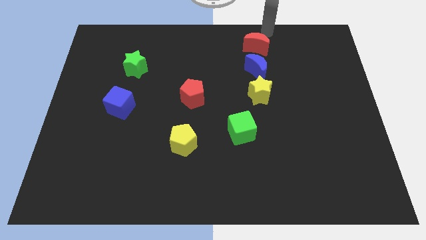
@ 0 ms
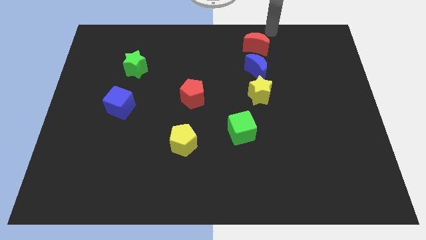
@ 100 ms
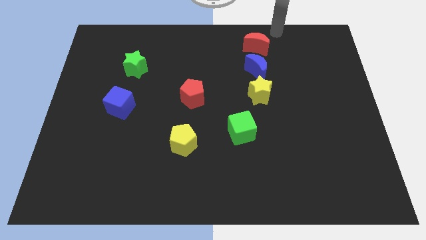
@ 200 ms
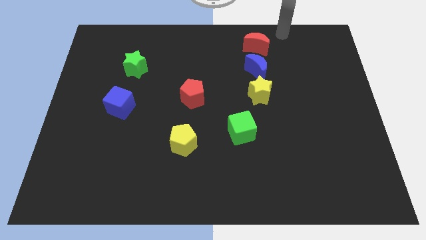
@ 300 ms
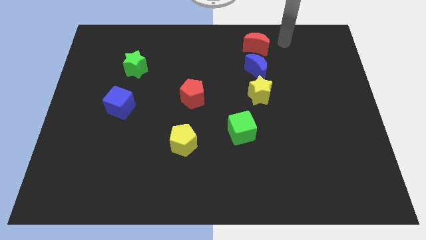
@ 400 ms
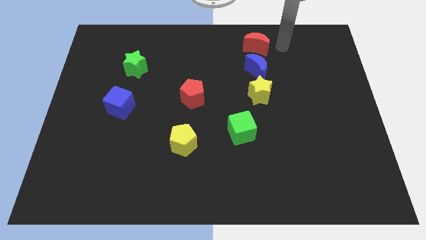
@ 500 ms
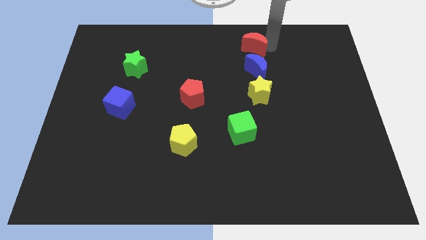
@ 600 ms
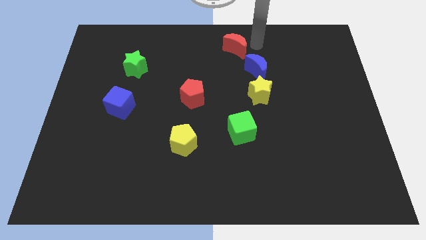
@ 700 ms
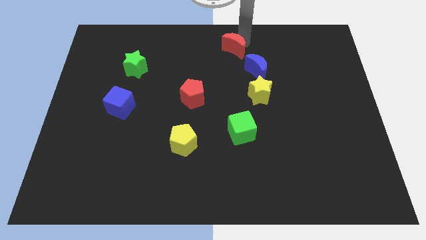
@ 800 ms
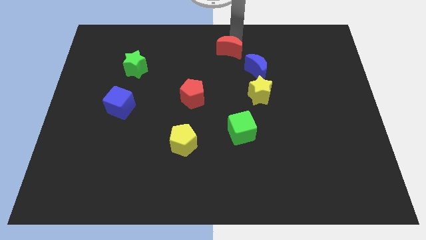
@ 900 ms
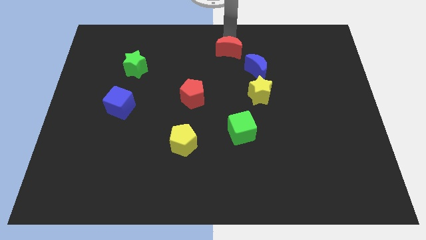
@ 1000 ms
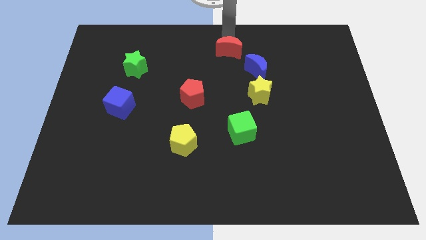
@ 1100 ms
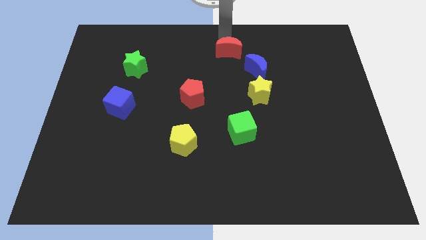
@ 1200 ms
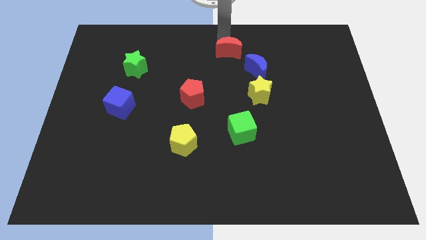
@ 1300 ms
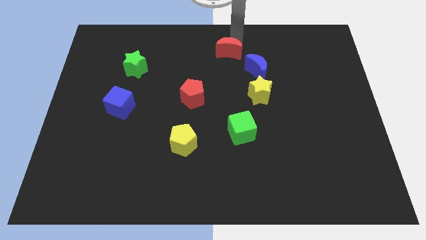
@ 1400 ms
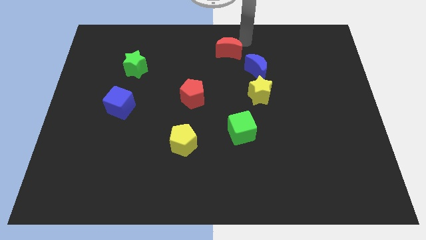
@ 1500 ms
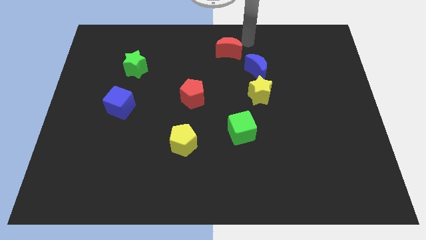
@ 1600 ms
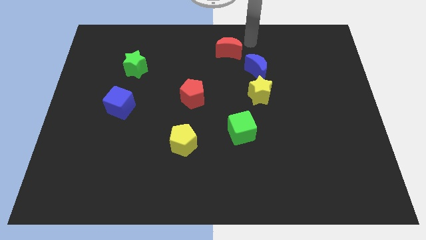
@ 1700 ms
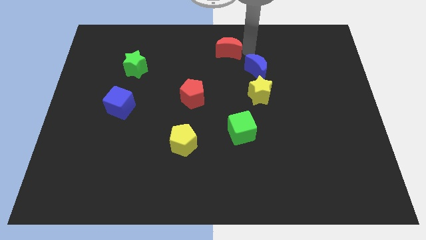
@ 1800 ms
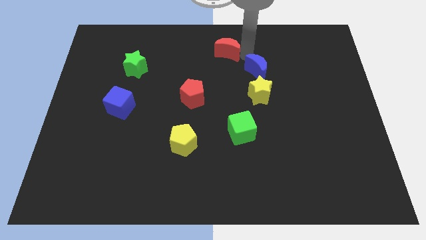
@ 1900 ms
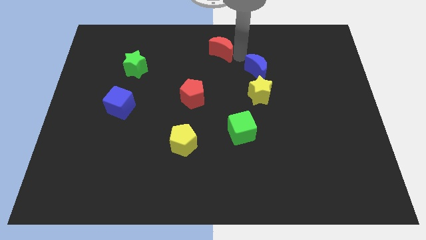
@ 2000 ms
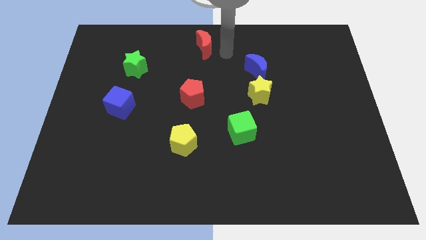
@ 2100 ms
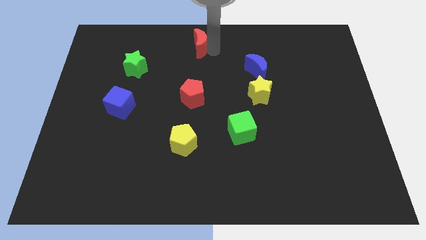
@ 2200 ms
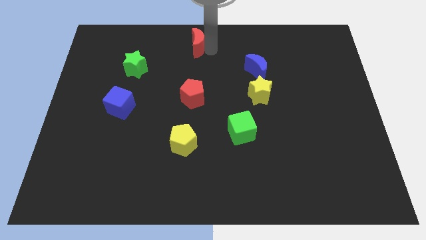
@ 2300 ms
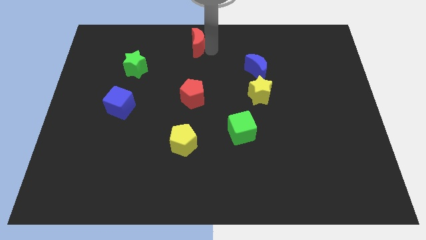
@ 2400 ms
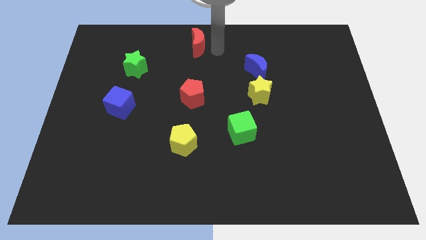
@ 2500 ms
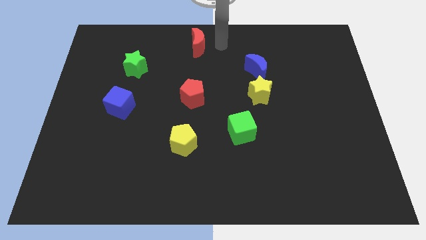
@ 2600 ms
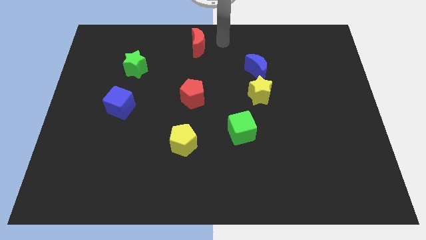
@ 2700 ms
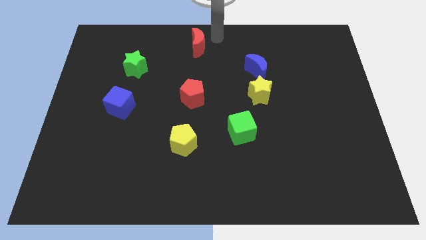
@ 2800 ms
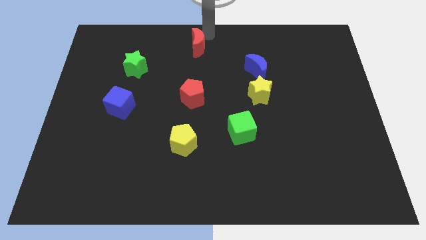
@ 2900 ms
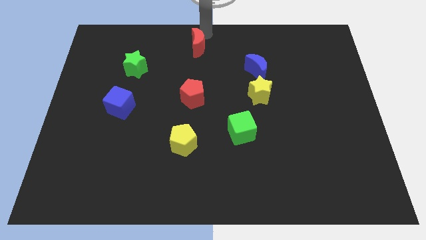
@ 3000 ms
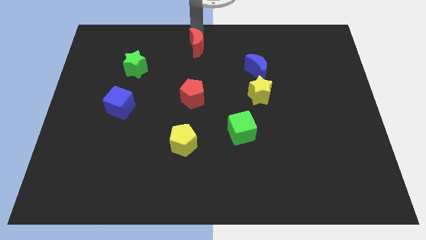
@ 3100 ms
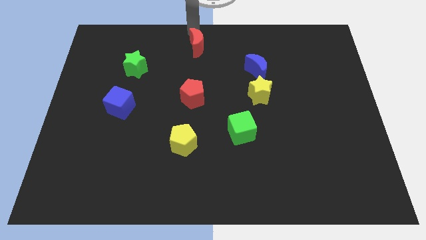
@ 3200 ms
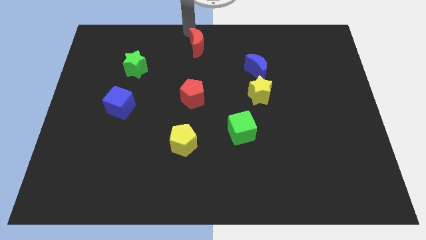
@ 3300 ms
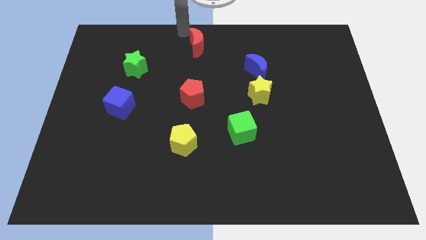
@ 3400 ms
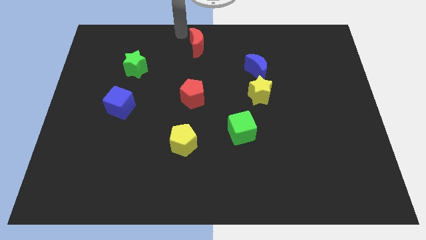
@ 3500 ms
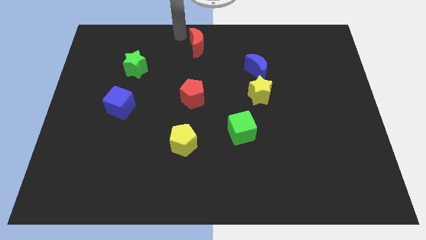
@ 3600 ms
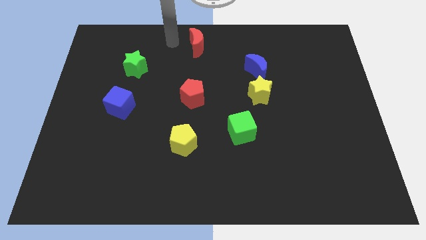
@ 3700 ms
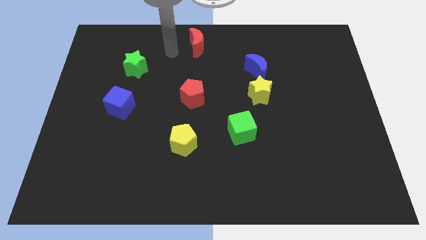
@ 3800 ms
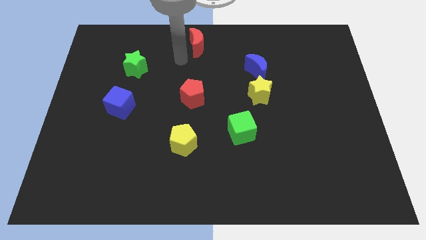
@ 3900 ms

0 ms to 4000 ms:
place the red crescent vertically to red pentagon

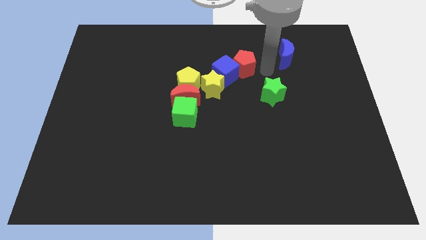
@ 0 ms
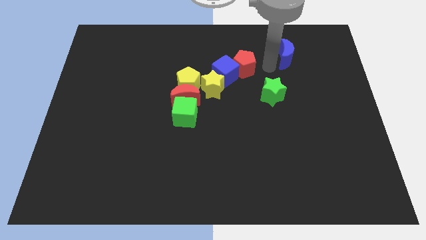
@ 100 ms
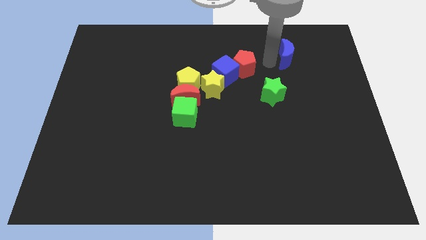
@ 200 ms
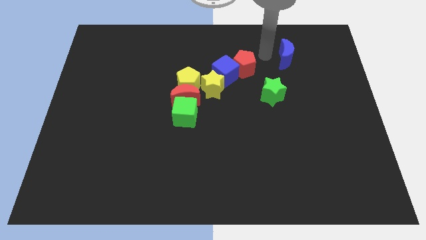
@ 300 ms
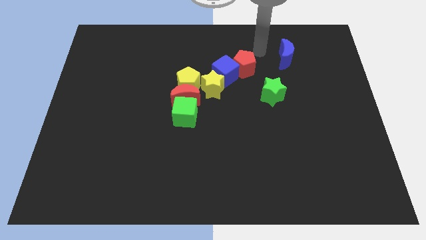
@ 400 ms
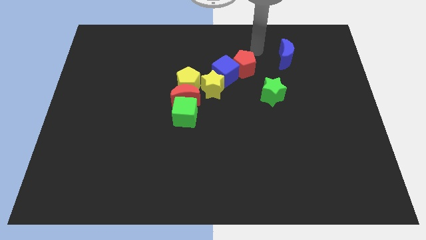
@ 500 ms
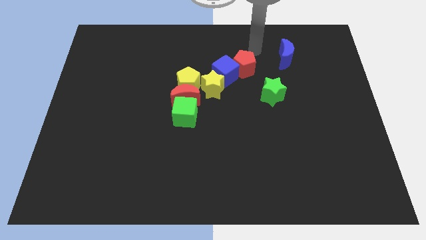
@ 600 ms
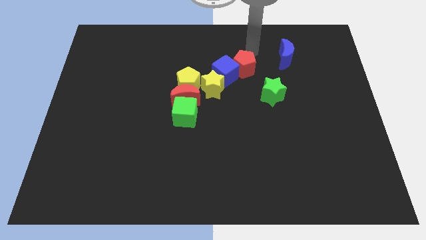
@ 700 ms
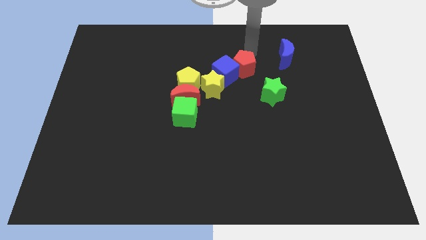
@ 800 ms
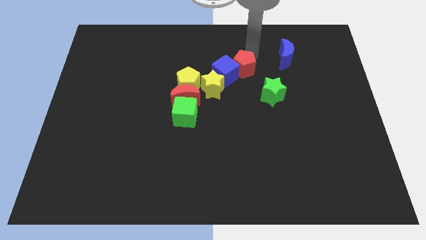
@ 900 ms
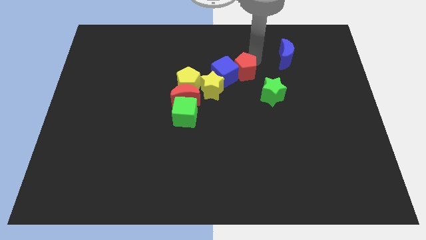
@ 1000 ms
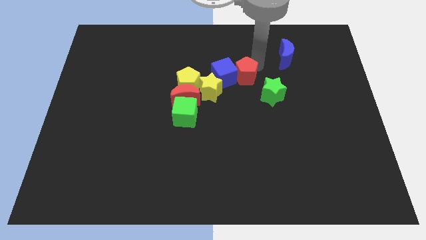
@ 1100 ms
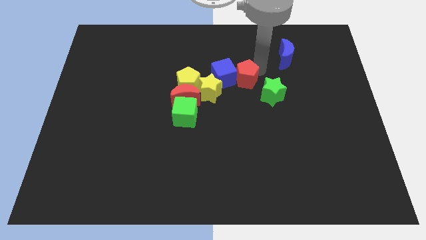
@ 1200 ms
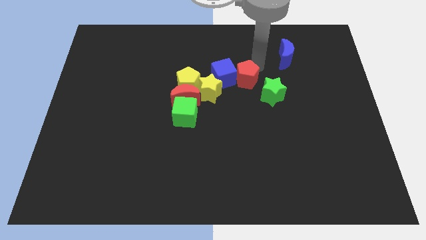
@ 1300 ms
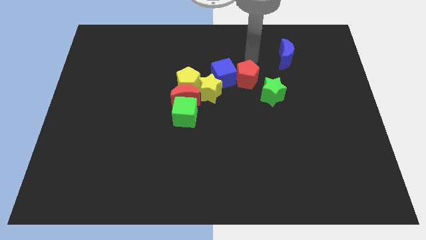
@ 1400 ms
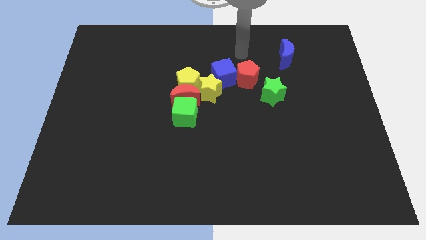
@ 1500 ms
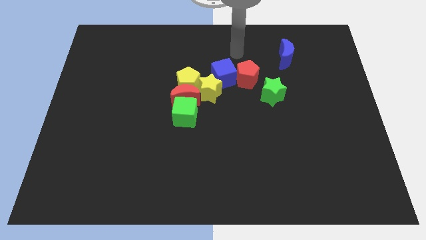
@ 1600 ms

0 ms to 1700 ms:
slightly push the red pentagon downwards of the board

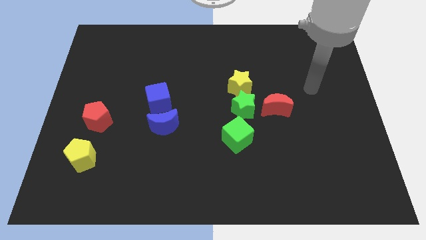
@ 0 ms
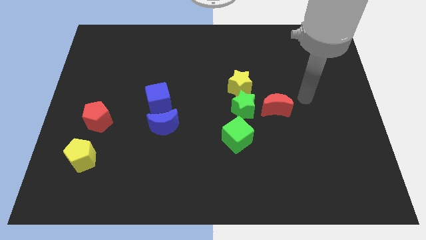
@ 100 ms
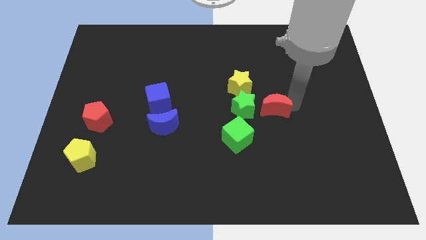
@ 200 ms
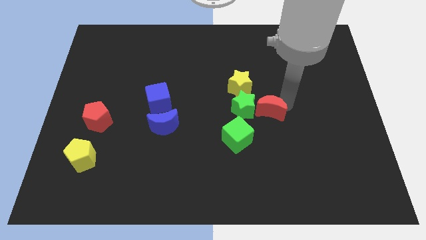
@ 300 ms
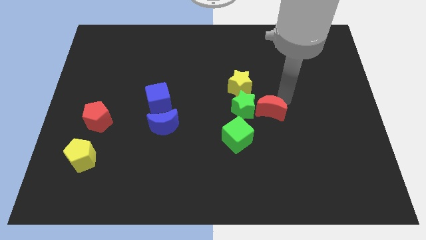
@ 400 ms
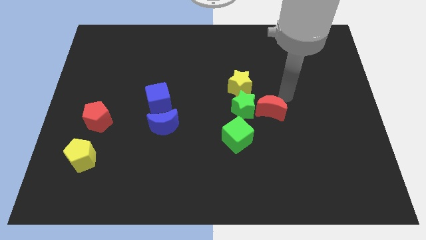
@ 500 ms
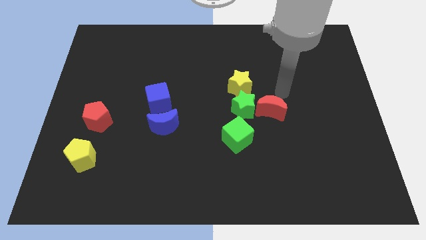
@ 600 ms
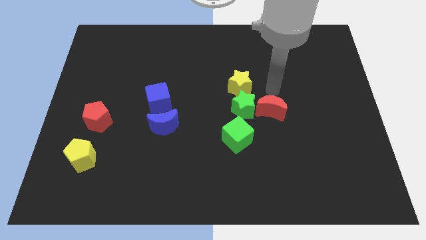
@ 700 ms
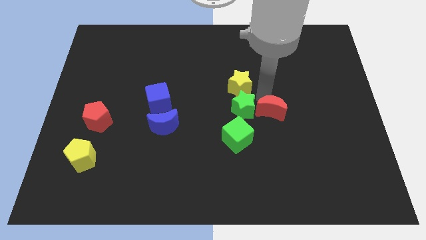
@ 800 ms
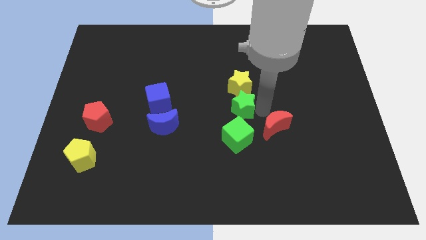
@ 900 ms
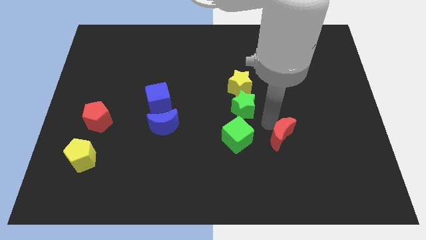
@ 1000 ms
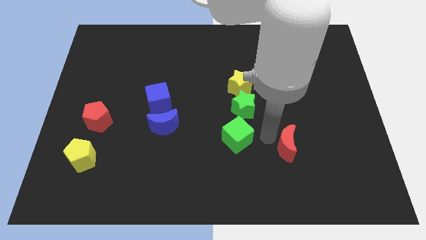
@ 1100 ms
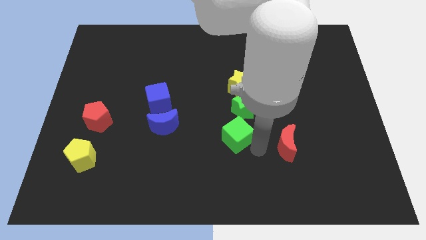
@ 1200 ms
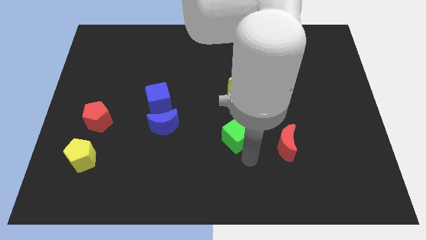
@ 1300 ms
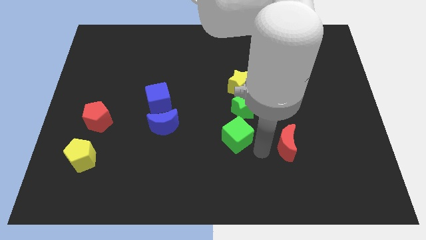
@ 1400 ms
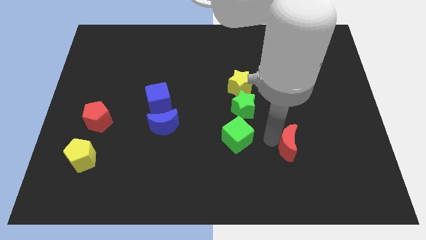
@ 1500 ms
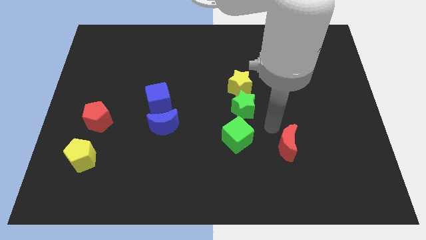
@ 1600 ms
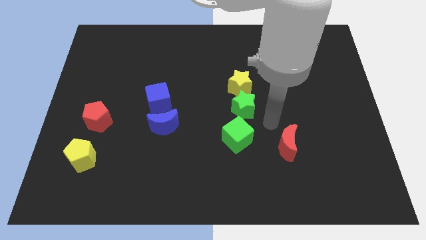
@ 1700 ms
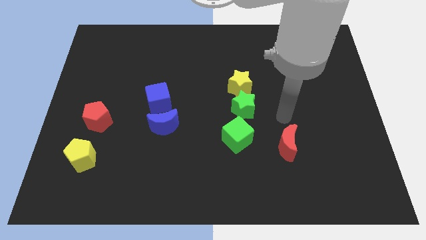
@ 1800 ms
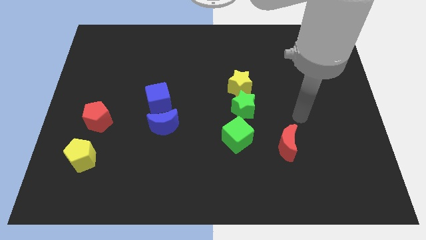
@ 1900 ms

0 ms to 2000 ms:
place the red moon parallel to the green cube

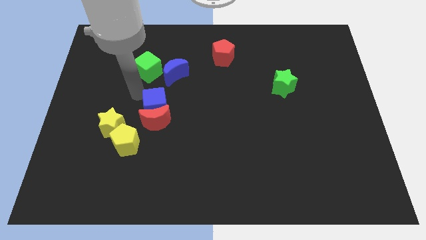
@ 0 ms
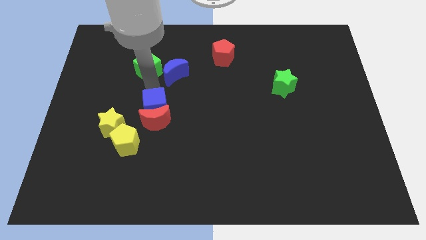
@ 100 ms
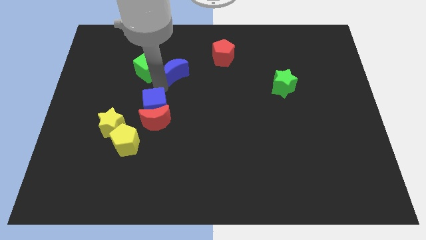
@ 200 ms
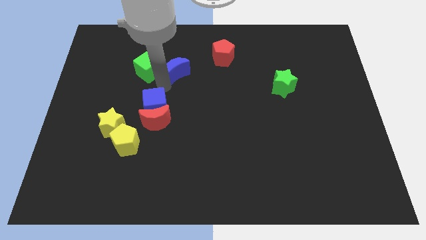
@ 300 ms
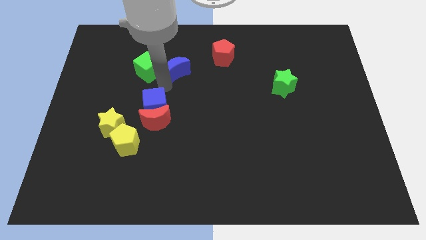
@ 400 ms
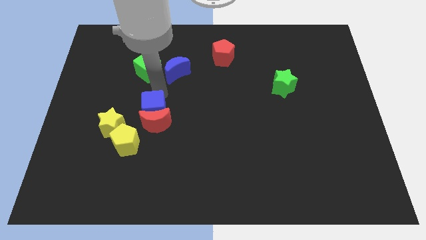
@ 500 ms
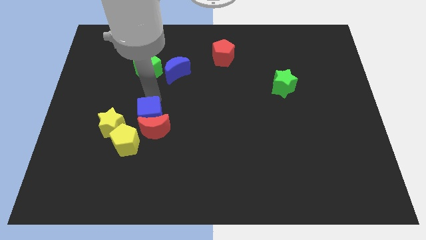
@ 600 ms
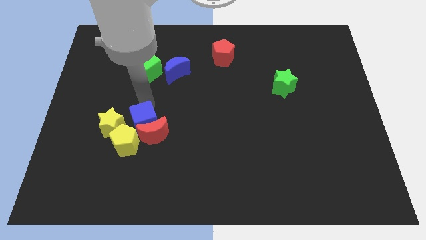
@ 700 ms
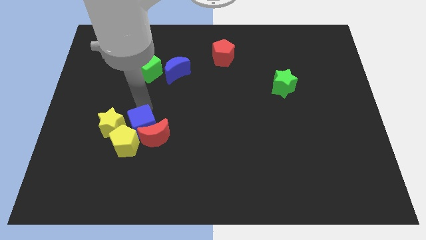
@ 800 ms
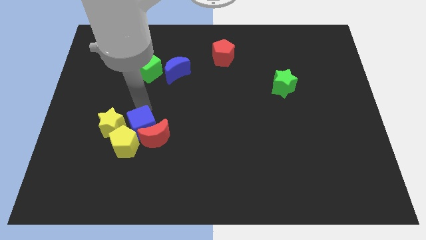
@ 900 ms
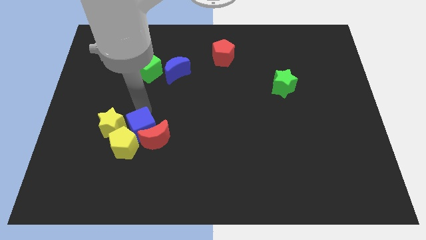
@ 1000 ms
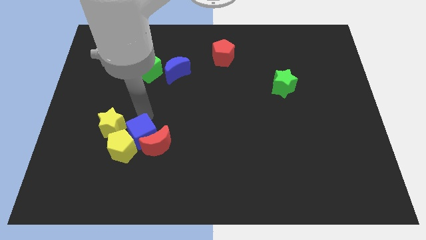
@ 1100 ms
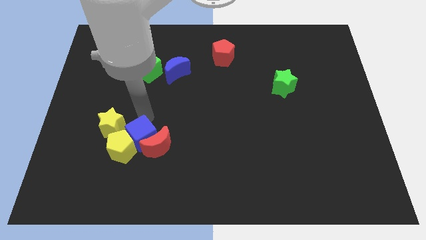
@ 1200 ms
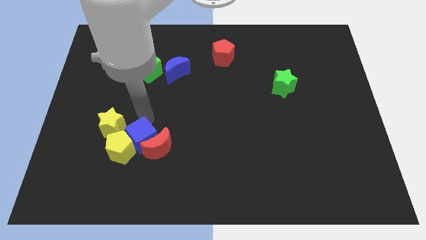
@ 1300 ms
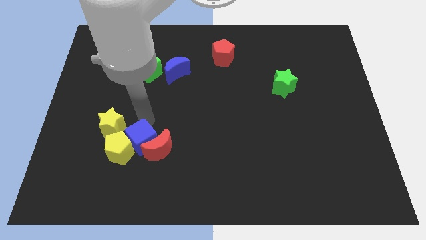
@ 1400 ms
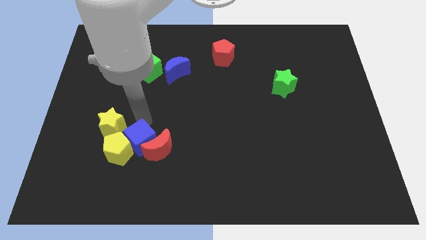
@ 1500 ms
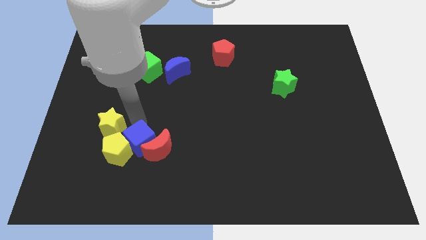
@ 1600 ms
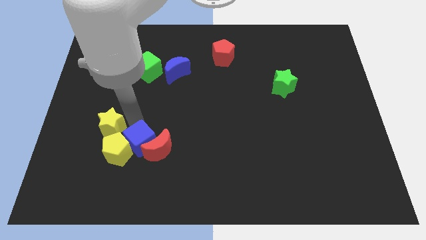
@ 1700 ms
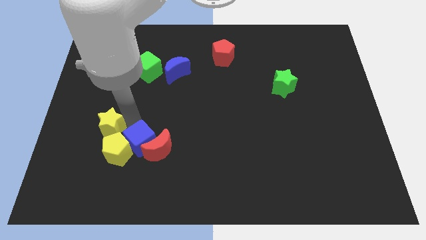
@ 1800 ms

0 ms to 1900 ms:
drag the red moon and the blue cube slightly to the down
